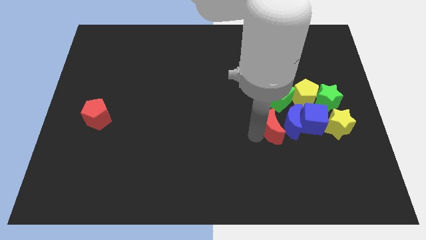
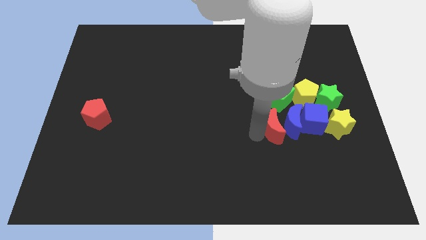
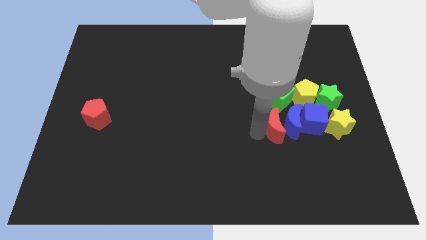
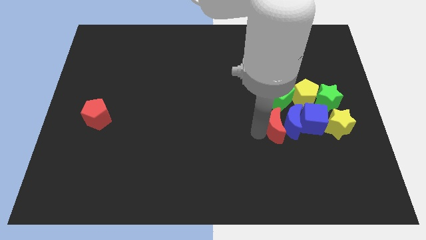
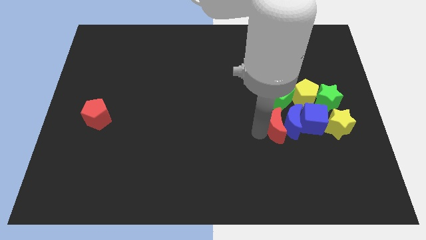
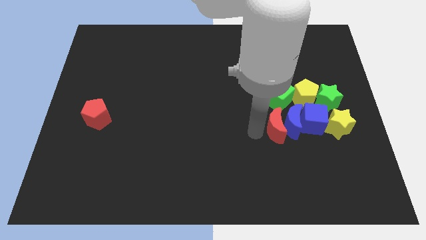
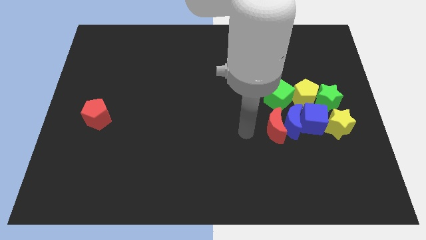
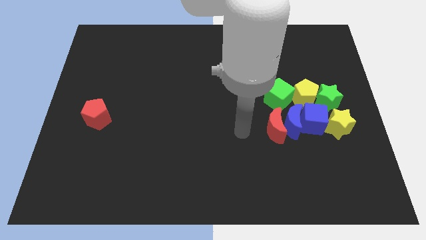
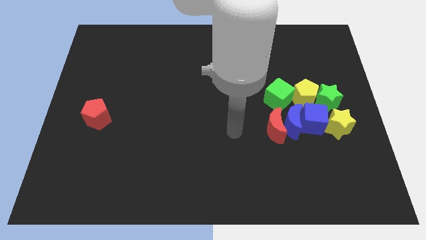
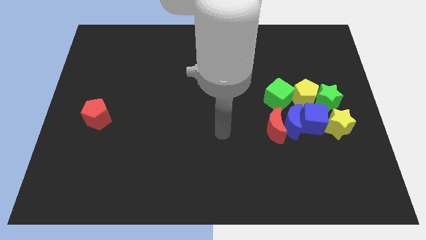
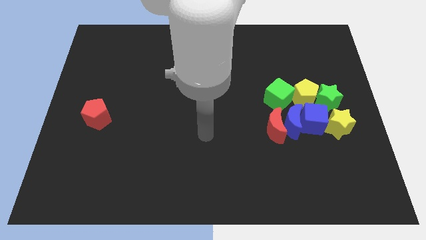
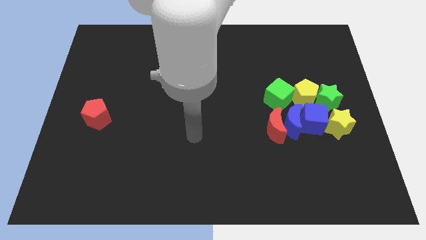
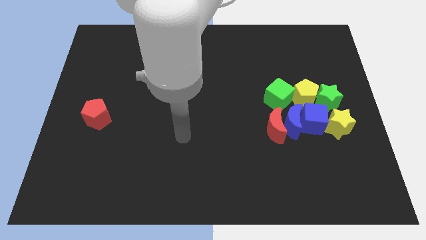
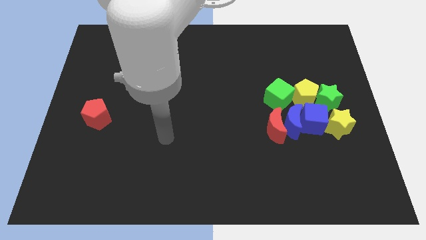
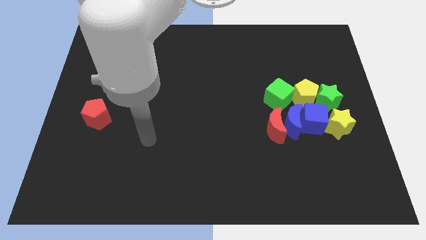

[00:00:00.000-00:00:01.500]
push the red crescent to the left of the blue crescent

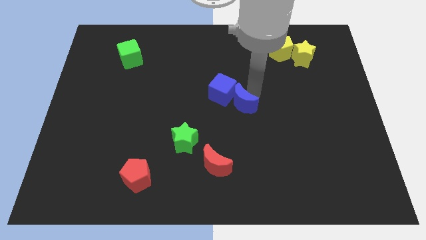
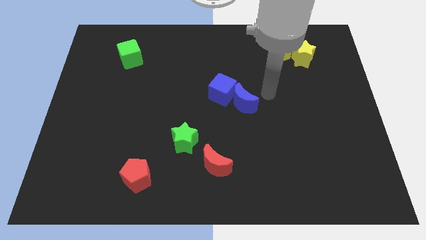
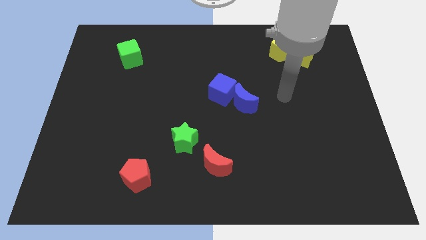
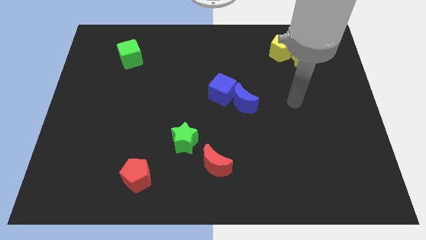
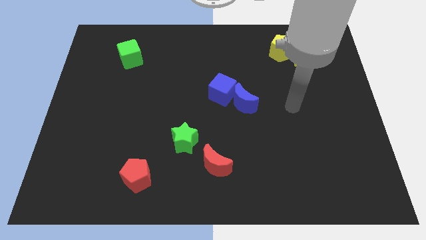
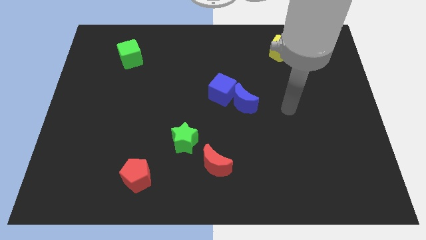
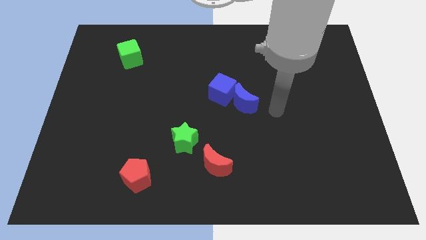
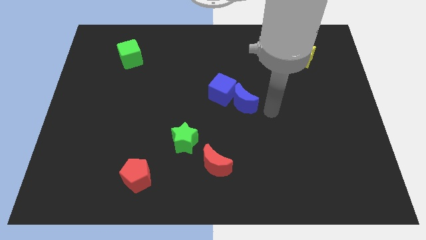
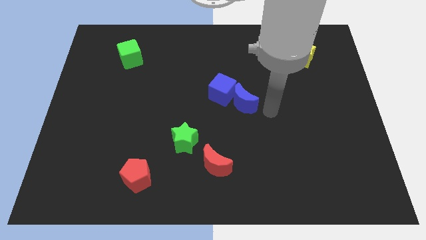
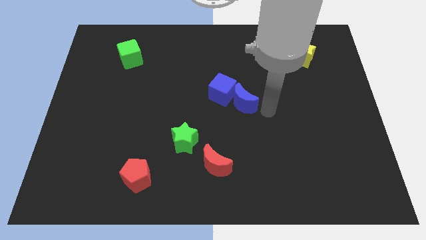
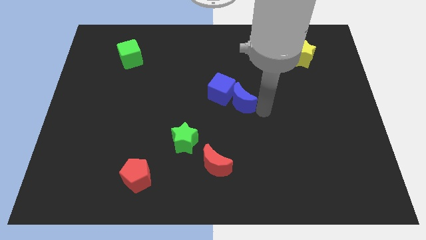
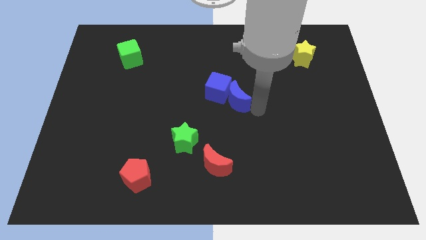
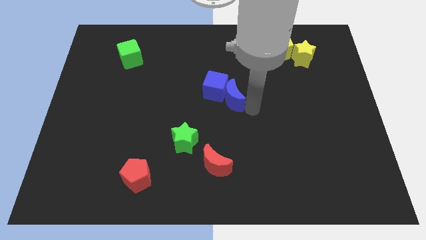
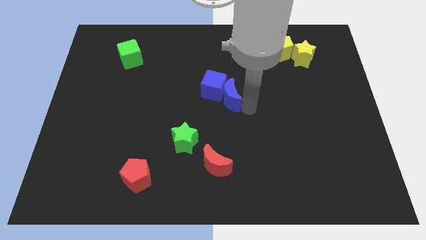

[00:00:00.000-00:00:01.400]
move the blue cube with the blue crescent slightly left

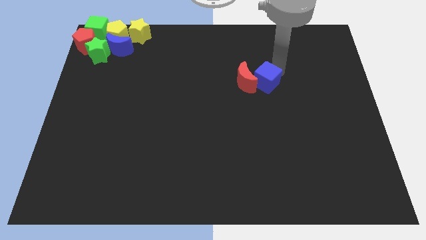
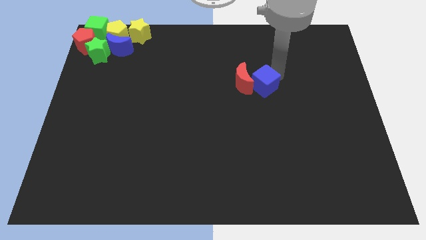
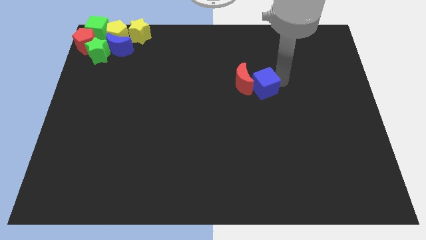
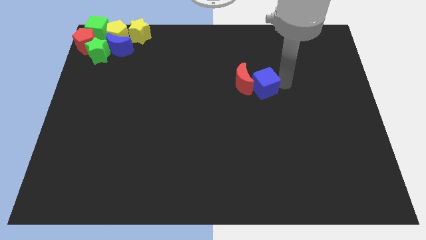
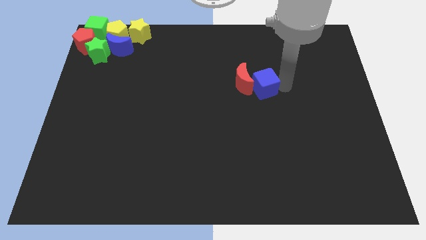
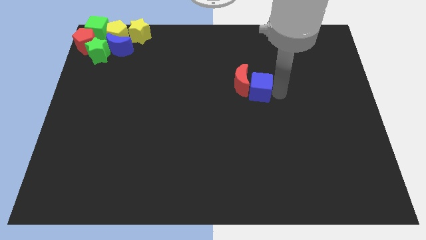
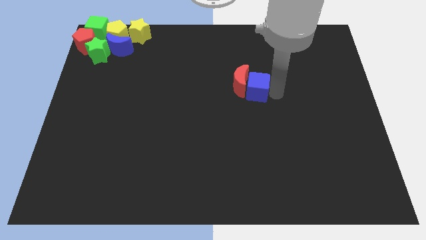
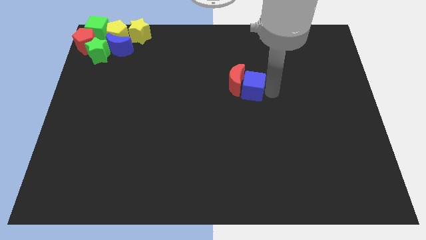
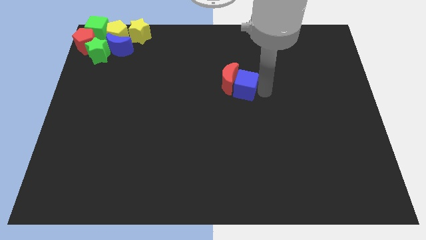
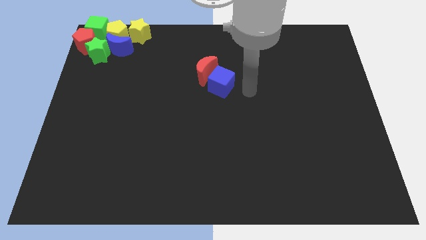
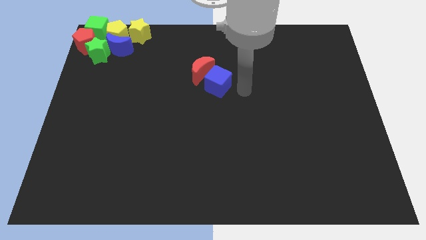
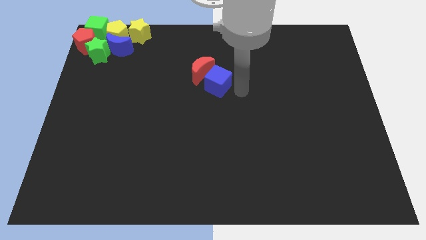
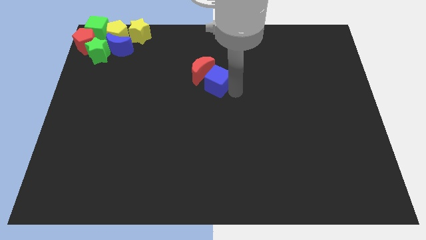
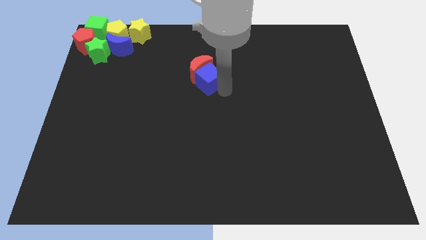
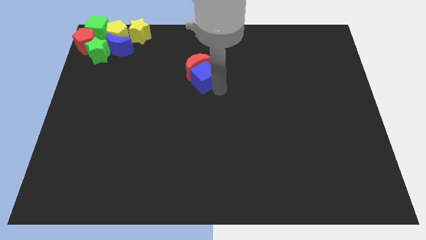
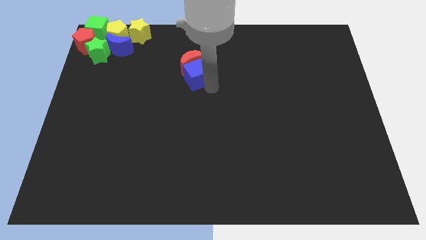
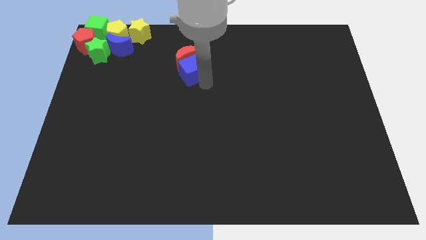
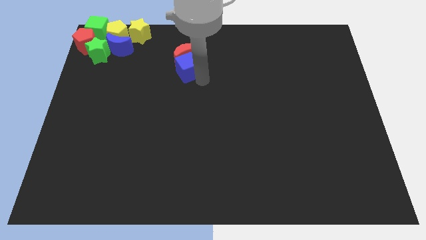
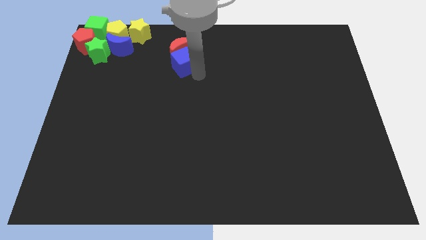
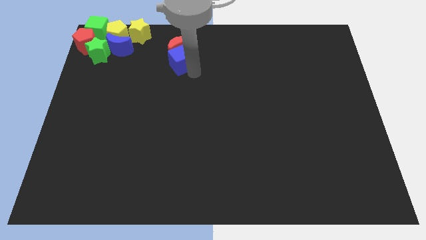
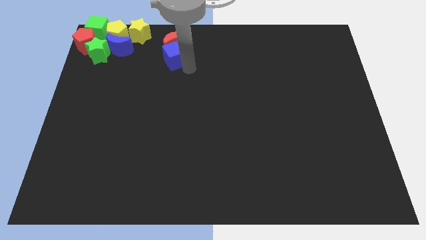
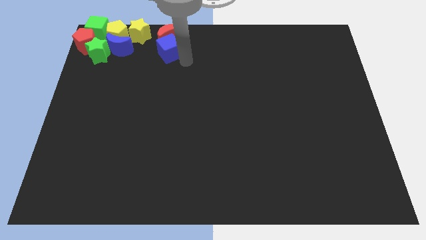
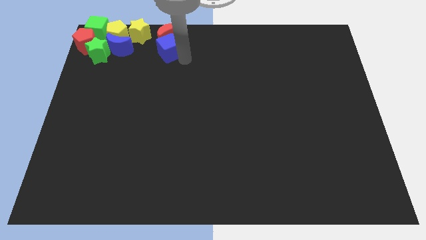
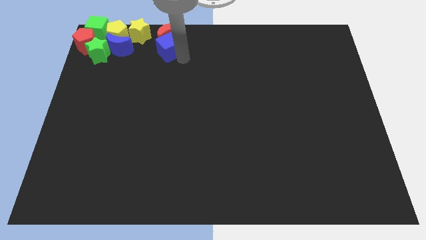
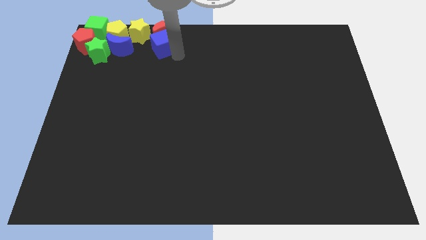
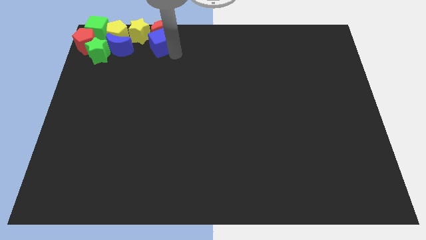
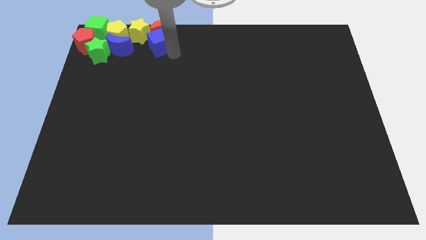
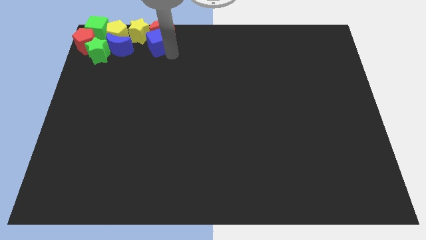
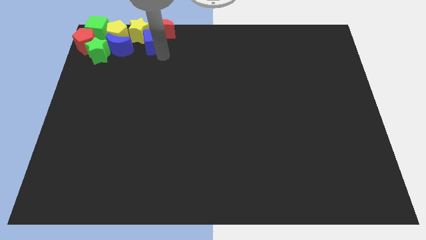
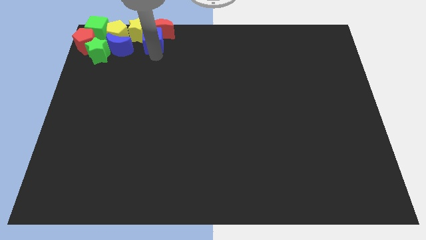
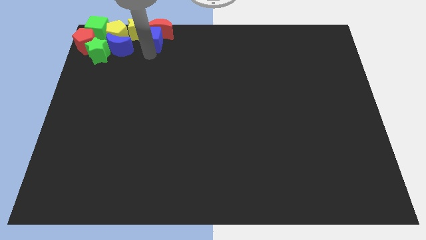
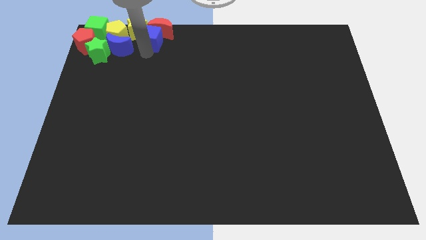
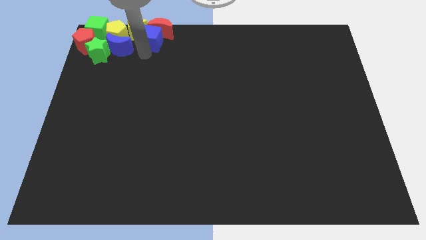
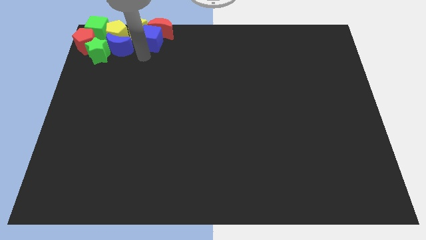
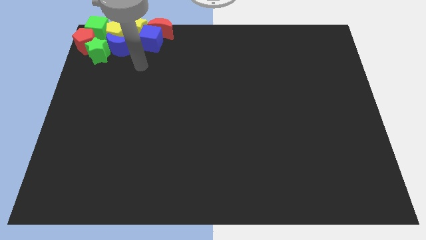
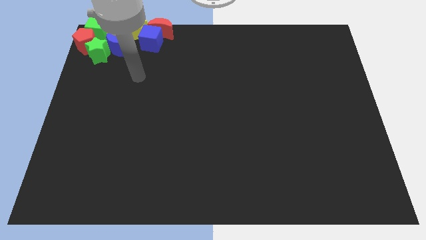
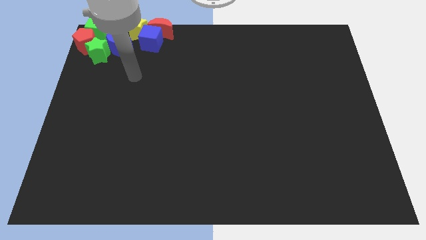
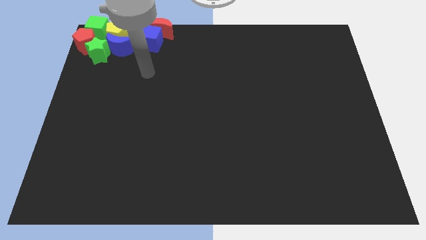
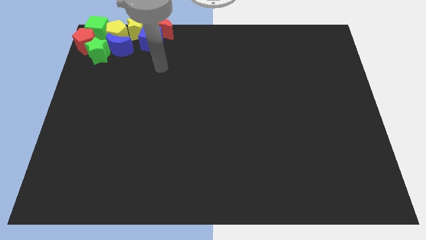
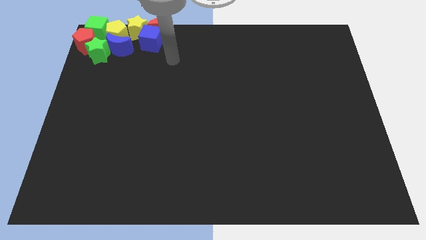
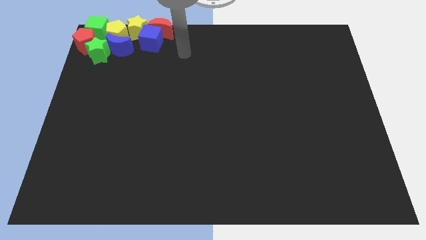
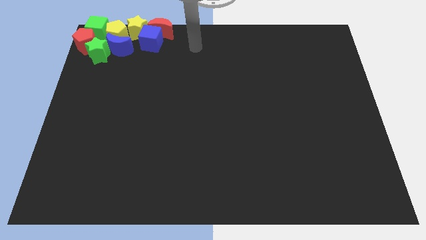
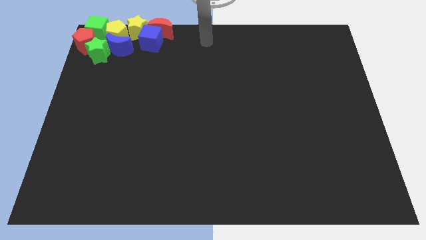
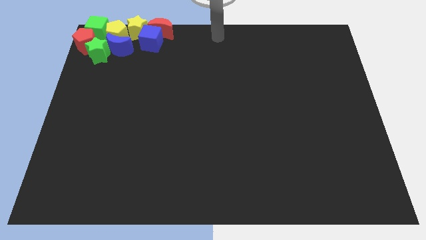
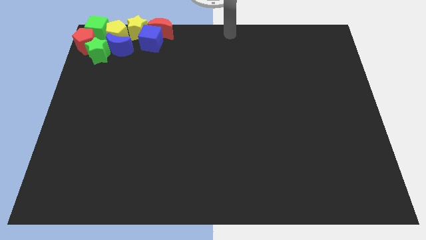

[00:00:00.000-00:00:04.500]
push the red crescent with the blue cube

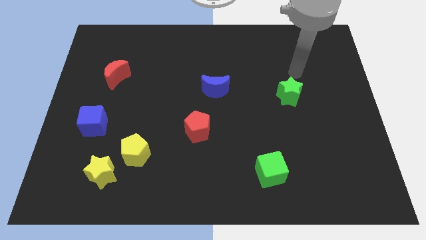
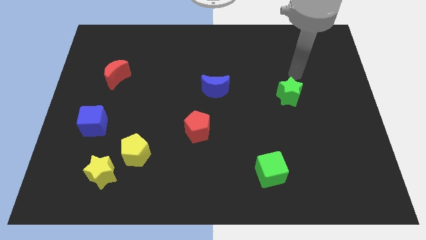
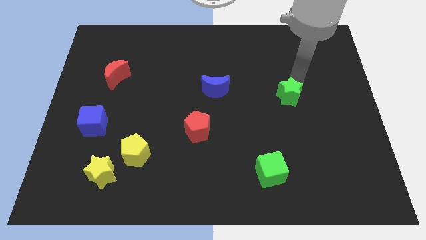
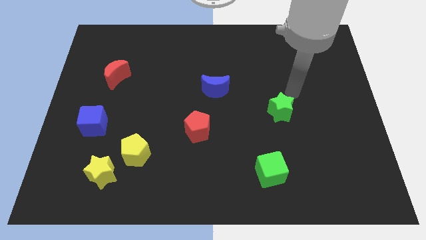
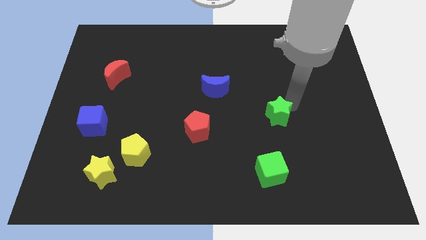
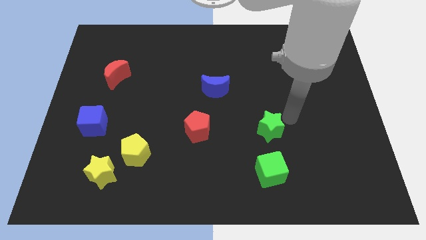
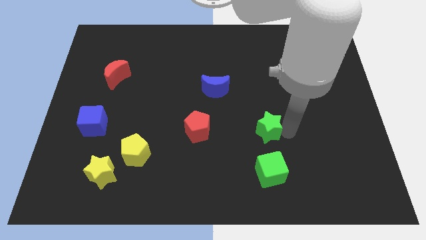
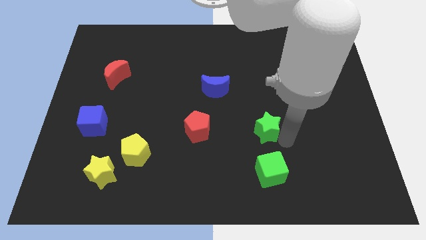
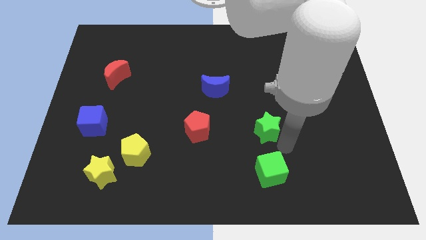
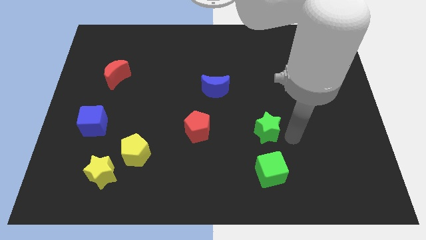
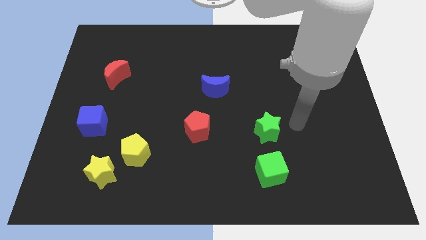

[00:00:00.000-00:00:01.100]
place the green star on top of the green cube

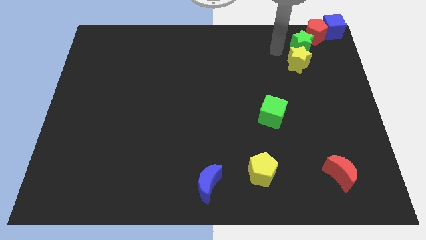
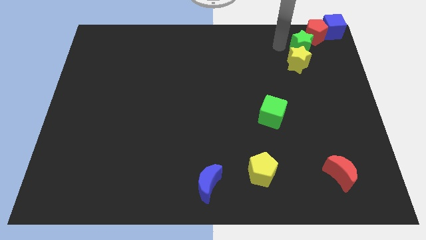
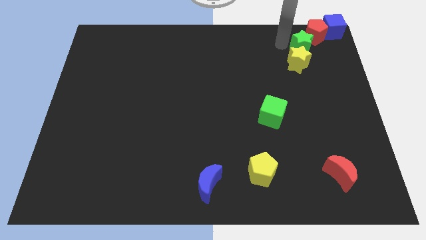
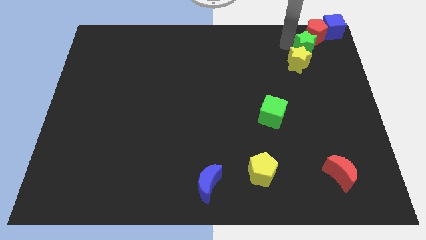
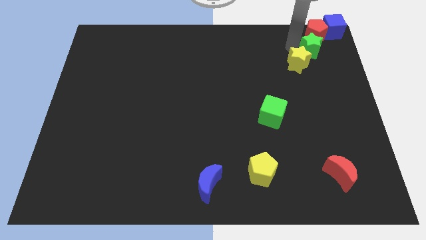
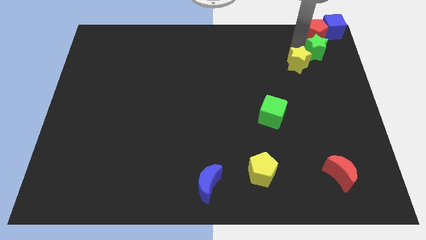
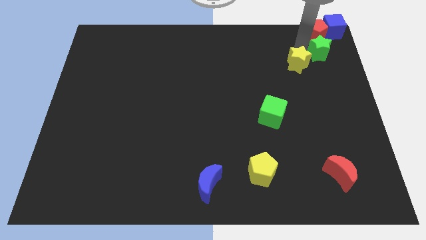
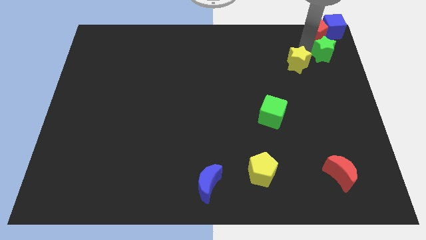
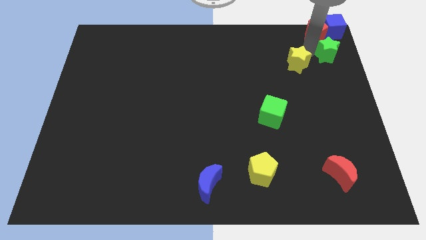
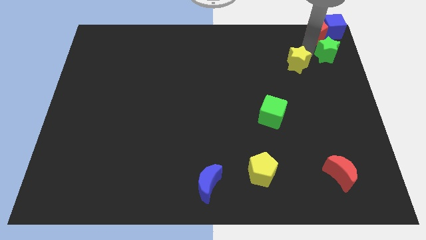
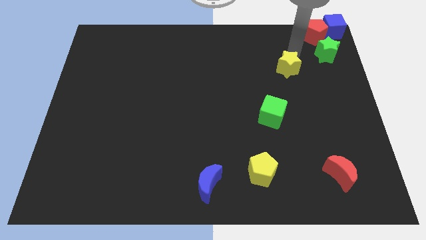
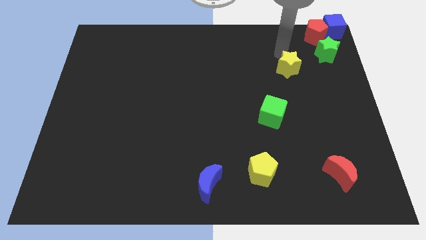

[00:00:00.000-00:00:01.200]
place green star to the top right corner of the board
